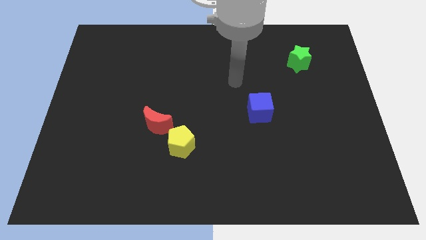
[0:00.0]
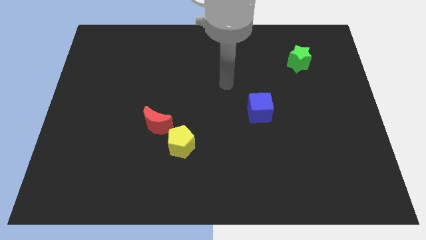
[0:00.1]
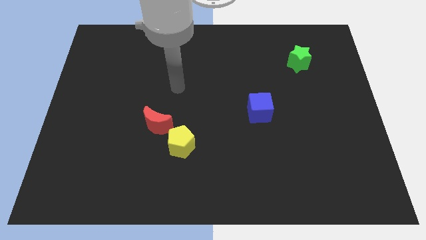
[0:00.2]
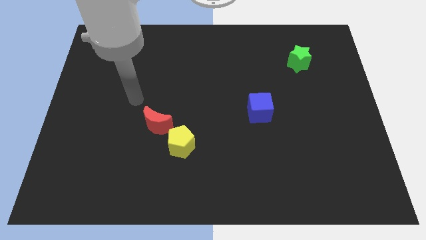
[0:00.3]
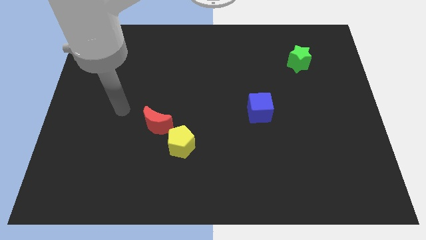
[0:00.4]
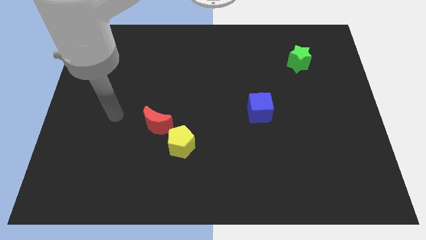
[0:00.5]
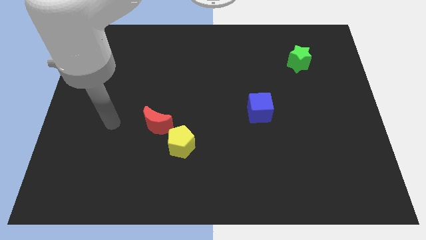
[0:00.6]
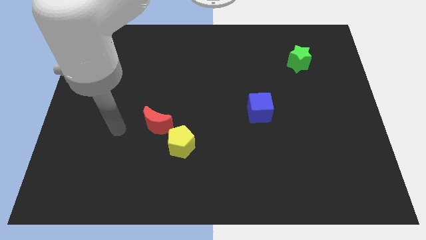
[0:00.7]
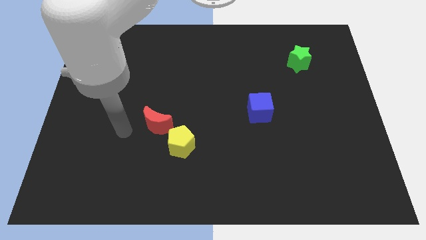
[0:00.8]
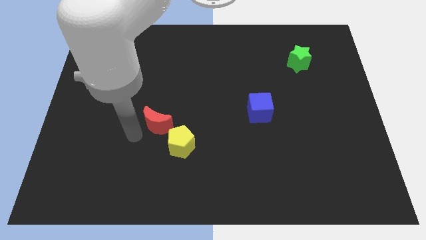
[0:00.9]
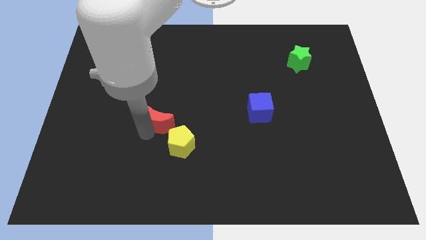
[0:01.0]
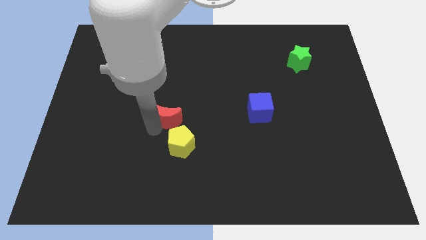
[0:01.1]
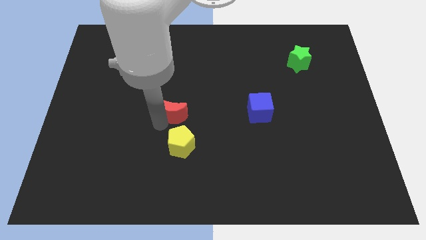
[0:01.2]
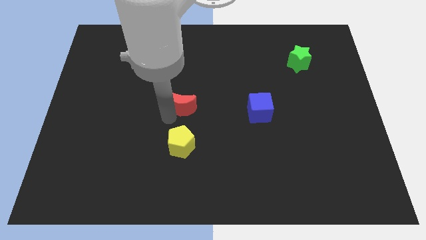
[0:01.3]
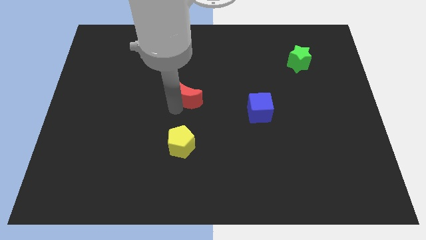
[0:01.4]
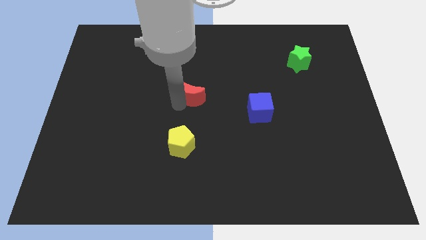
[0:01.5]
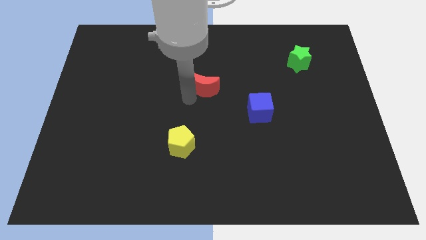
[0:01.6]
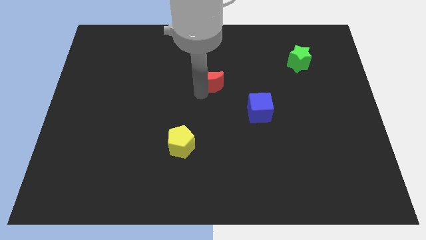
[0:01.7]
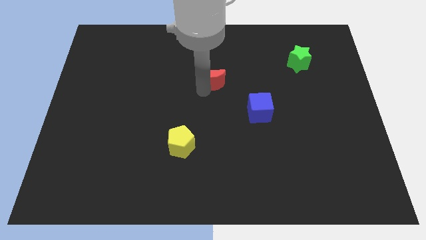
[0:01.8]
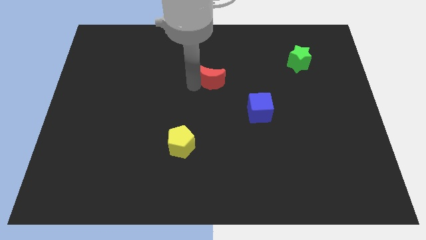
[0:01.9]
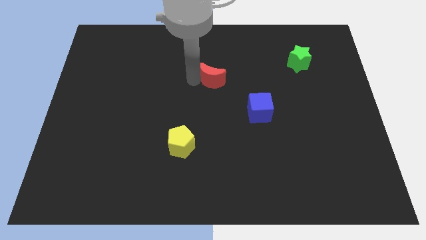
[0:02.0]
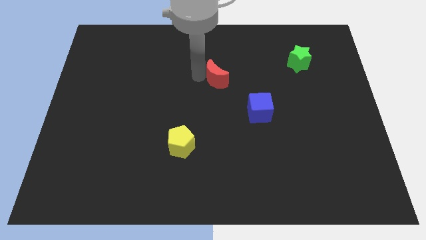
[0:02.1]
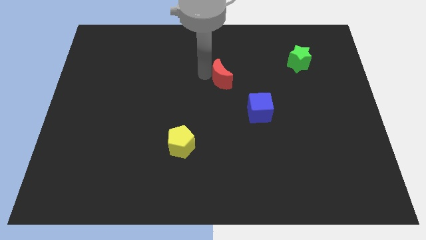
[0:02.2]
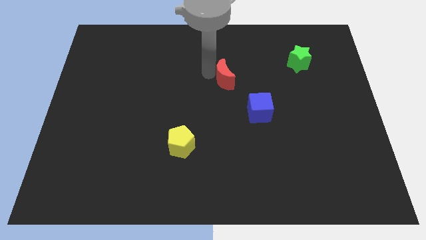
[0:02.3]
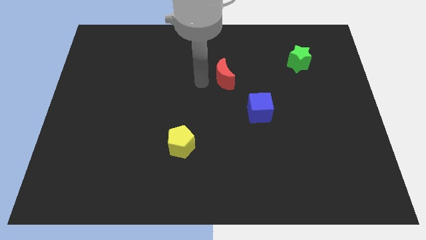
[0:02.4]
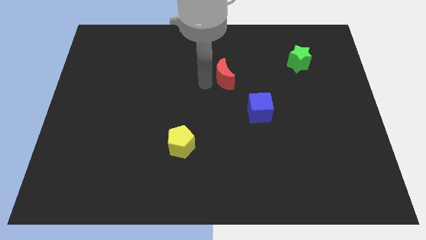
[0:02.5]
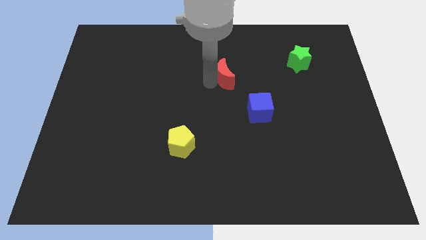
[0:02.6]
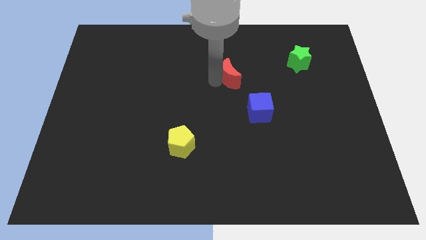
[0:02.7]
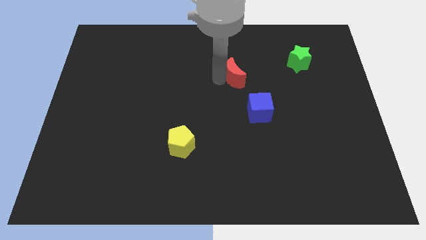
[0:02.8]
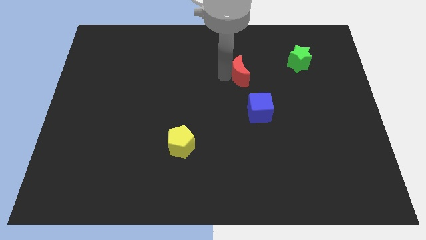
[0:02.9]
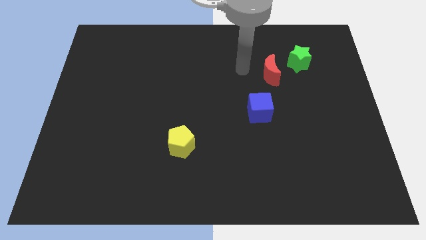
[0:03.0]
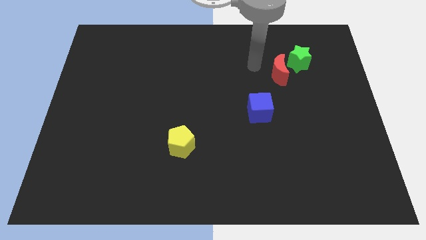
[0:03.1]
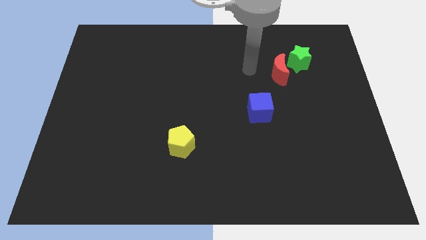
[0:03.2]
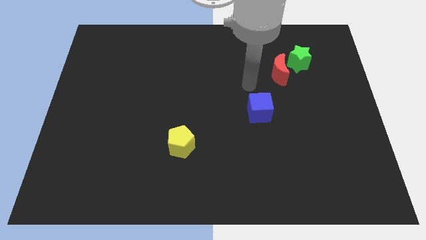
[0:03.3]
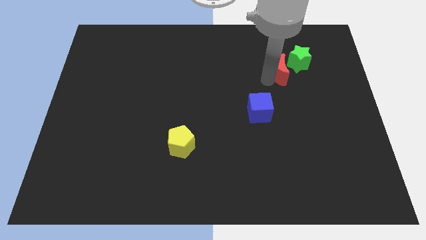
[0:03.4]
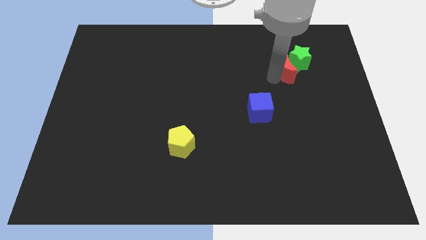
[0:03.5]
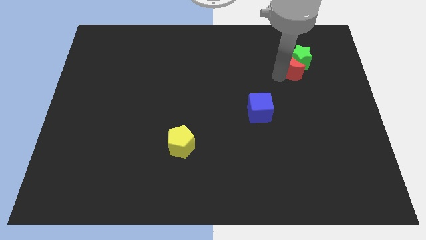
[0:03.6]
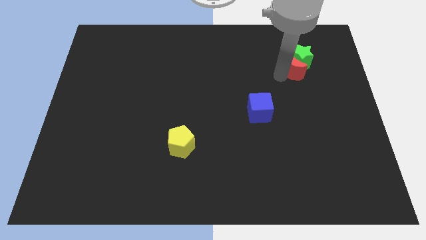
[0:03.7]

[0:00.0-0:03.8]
push the red block close to the star

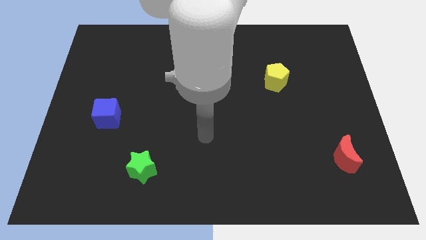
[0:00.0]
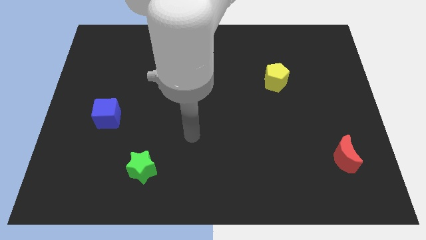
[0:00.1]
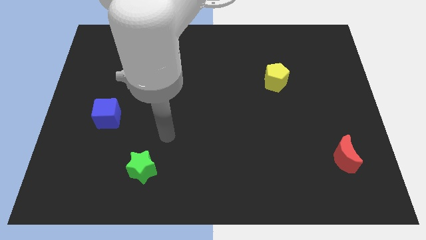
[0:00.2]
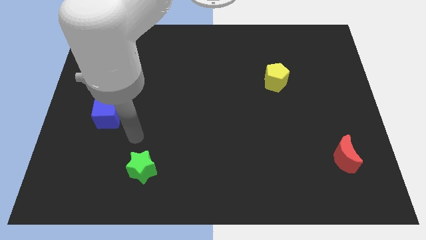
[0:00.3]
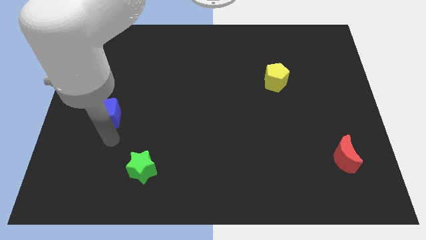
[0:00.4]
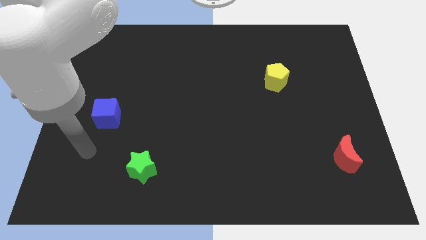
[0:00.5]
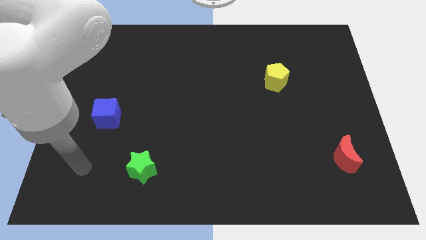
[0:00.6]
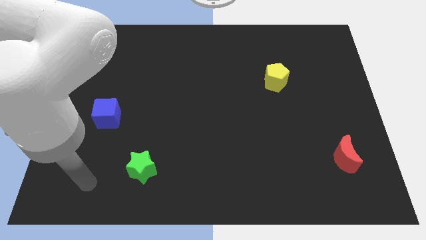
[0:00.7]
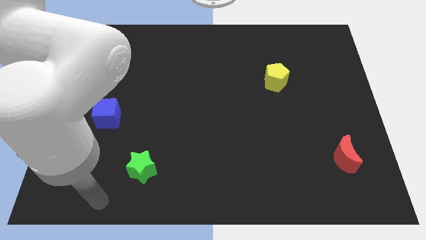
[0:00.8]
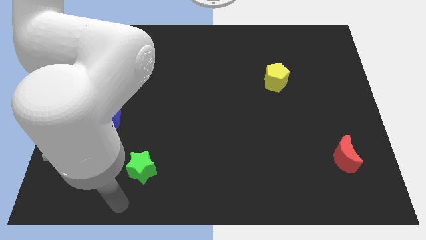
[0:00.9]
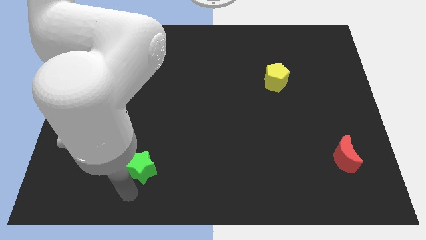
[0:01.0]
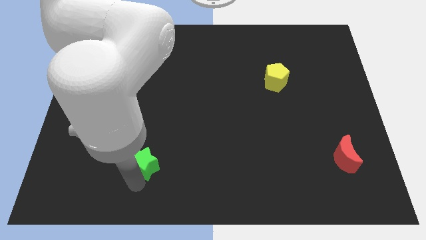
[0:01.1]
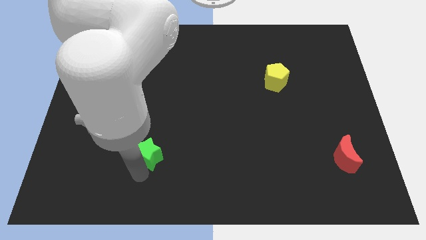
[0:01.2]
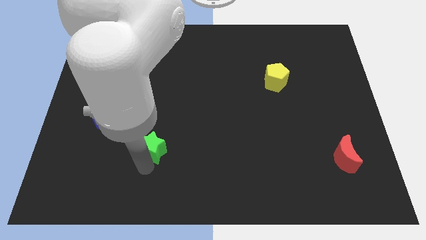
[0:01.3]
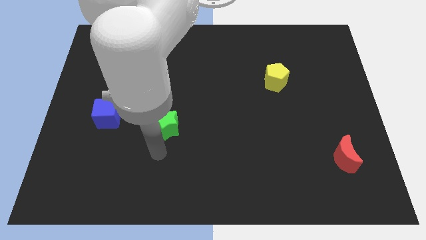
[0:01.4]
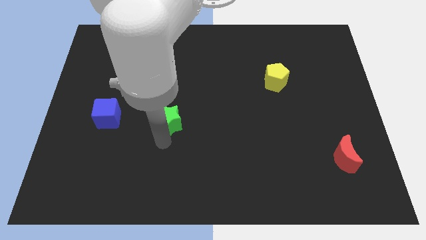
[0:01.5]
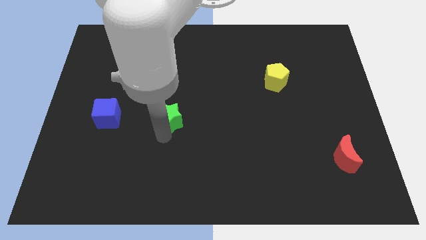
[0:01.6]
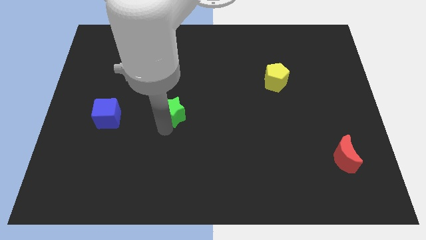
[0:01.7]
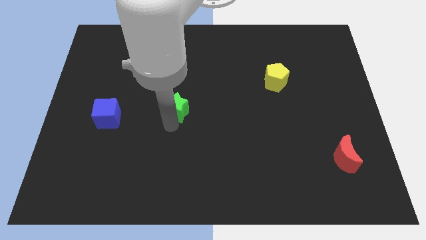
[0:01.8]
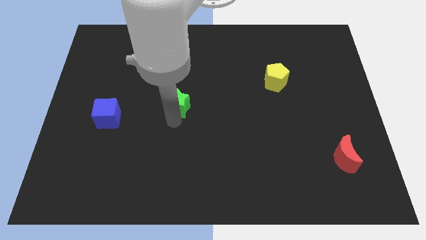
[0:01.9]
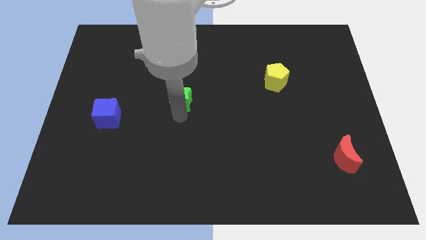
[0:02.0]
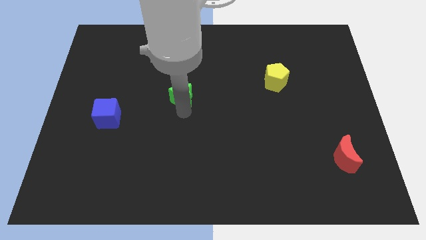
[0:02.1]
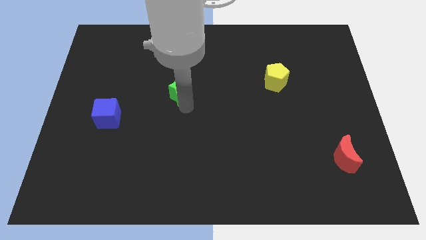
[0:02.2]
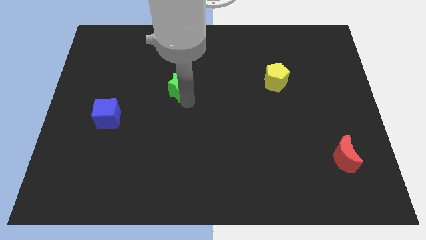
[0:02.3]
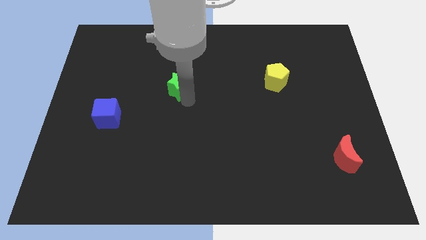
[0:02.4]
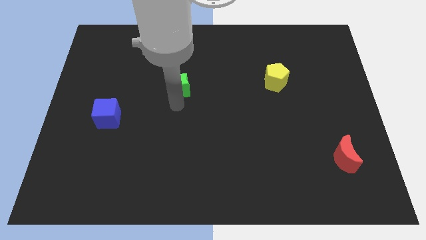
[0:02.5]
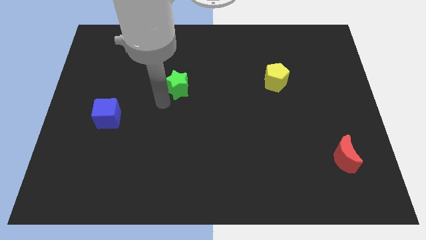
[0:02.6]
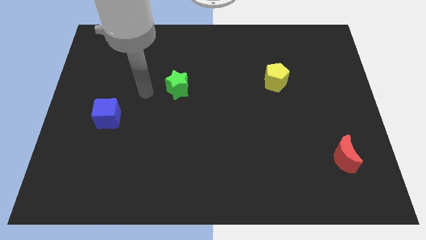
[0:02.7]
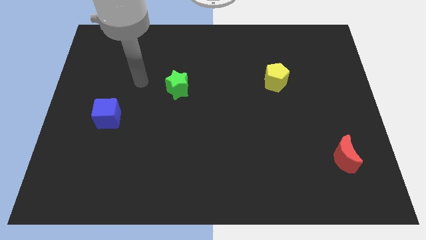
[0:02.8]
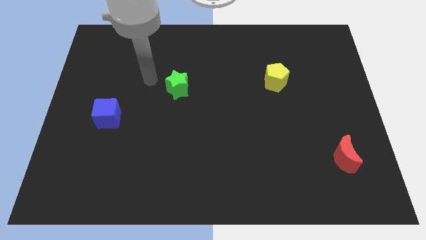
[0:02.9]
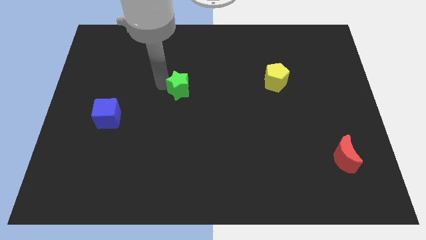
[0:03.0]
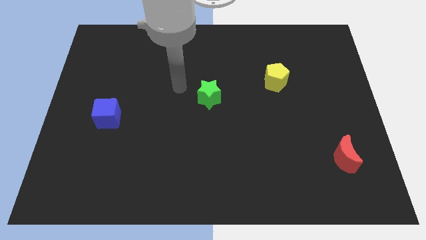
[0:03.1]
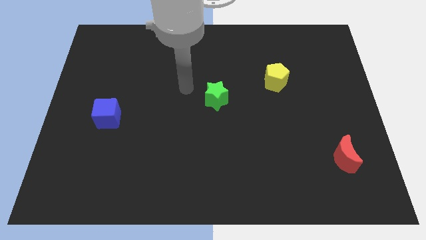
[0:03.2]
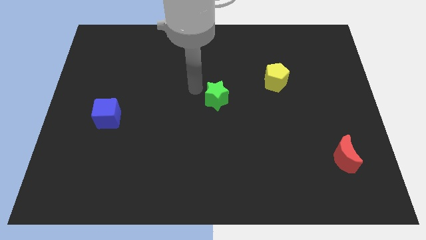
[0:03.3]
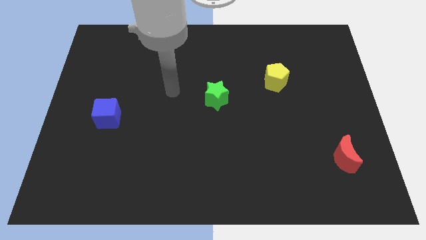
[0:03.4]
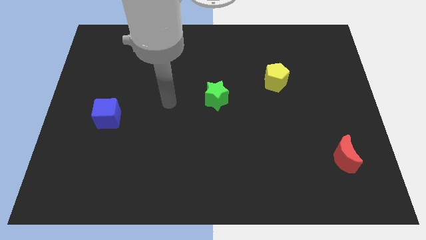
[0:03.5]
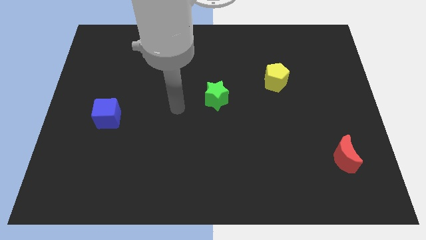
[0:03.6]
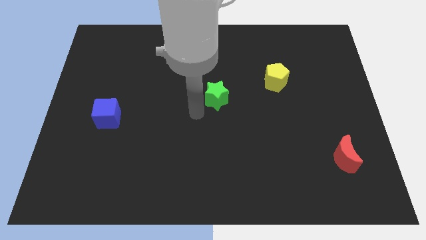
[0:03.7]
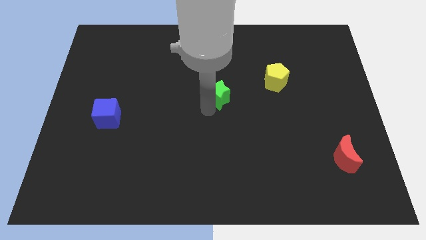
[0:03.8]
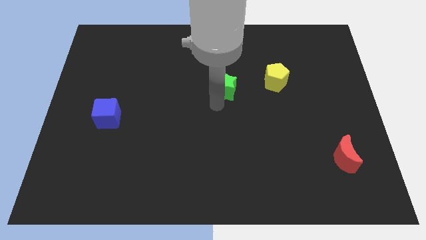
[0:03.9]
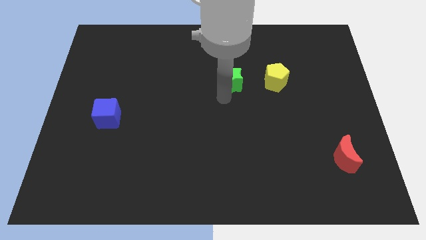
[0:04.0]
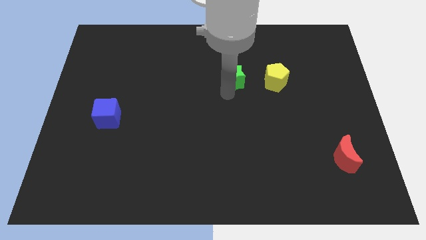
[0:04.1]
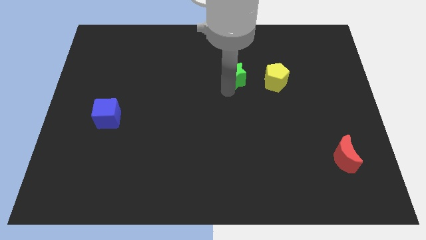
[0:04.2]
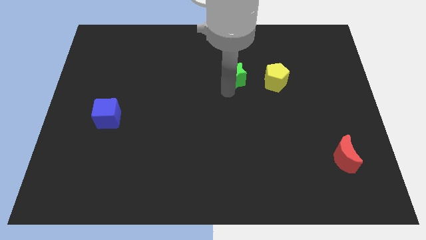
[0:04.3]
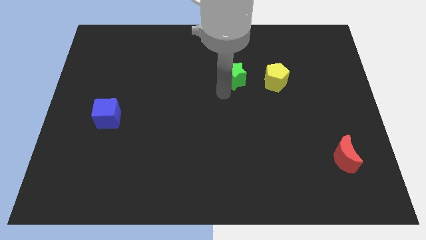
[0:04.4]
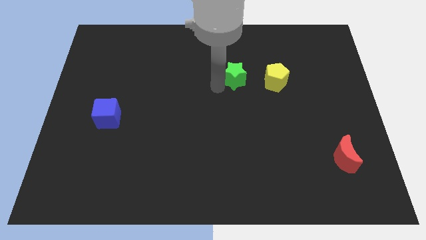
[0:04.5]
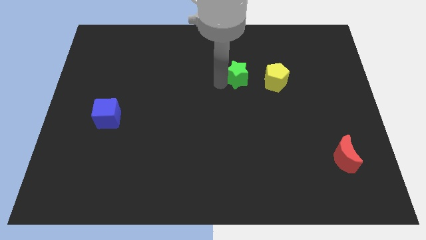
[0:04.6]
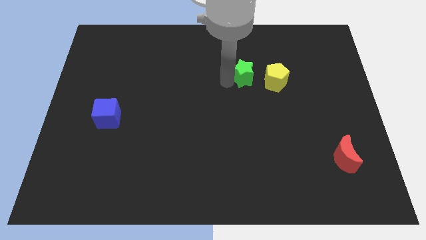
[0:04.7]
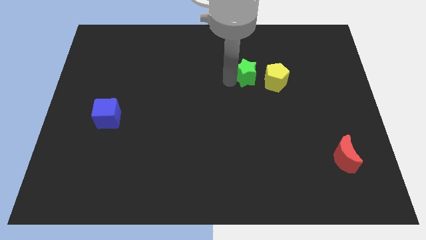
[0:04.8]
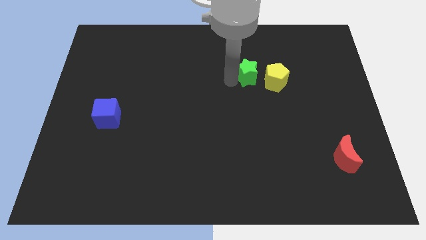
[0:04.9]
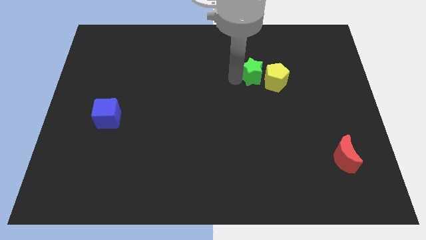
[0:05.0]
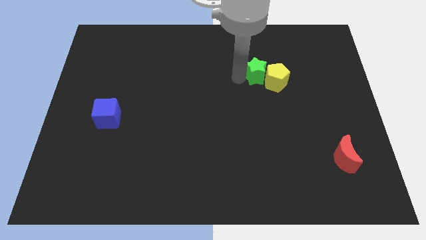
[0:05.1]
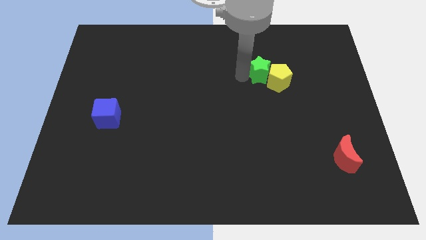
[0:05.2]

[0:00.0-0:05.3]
slide the green block close to the pentagon
